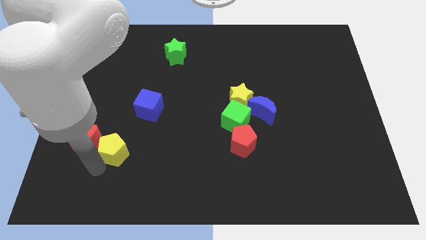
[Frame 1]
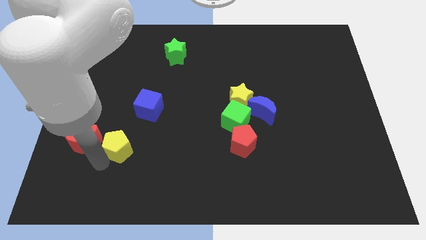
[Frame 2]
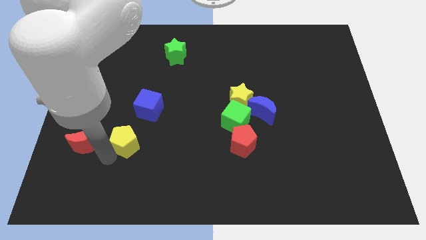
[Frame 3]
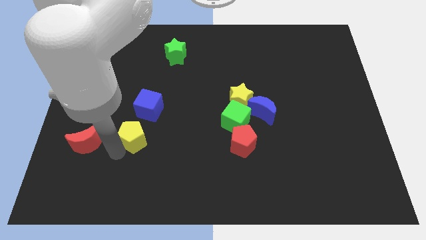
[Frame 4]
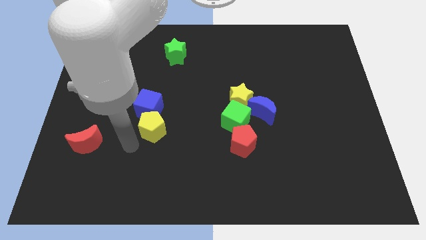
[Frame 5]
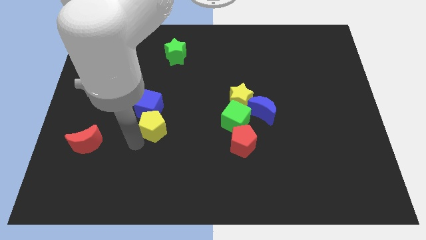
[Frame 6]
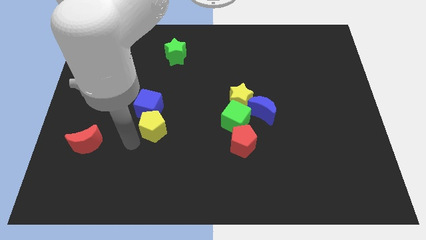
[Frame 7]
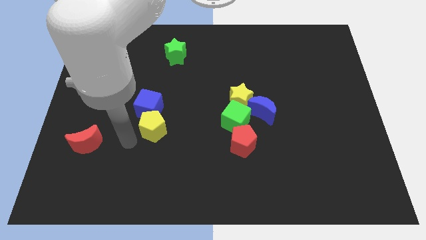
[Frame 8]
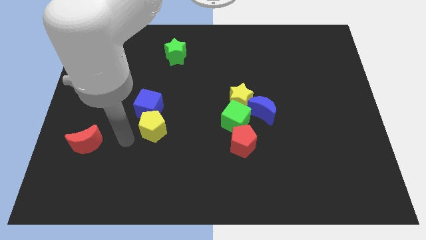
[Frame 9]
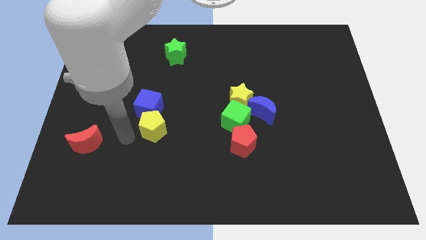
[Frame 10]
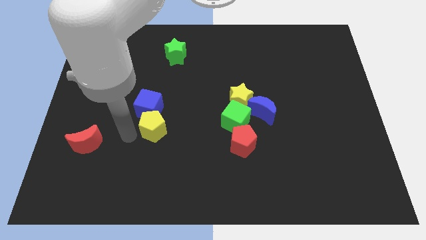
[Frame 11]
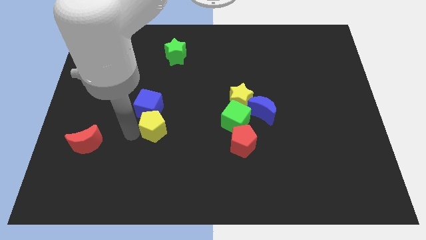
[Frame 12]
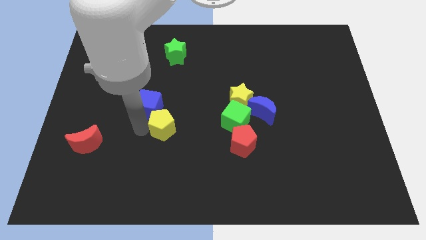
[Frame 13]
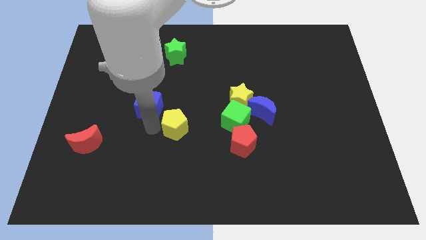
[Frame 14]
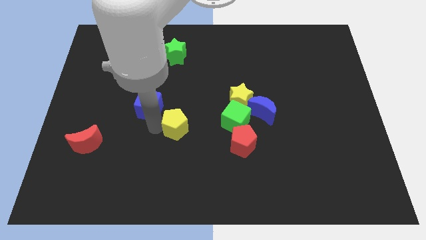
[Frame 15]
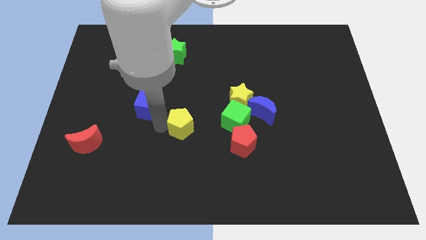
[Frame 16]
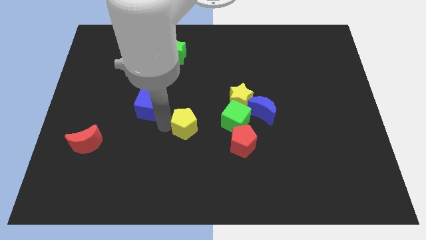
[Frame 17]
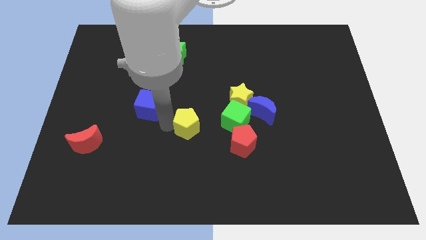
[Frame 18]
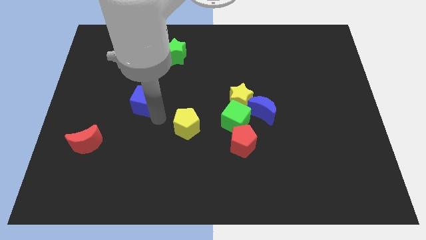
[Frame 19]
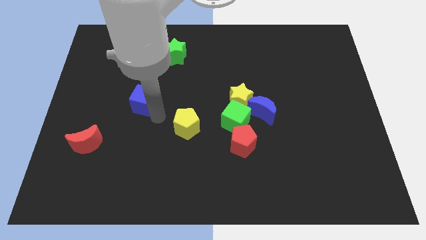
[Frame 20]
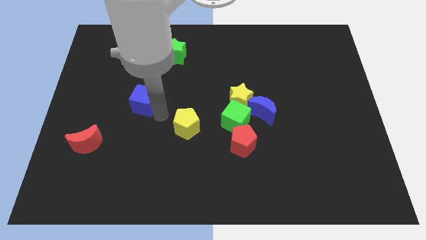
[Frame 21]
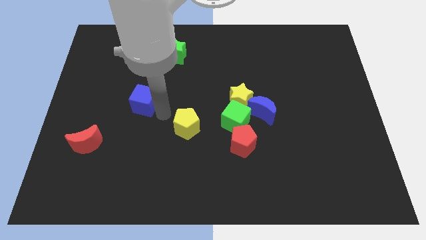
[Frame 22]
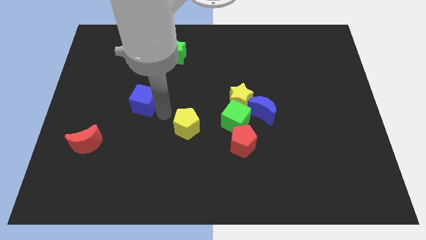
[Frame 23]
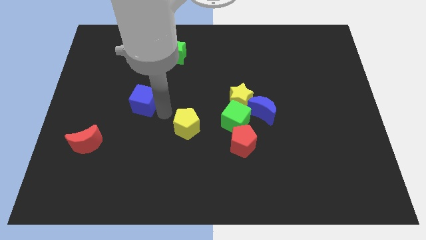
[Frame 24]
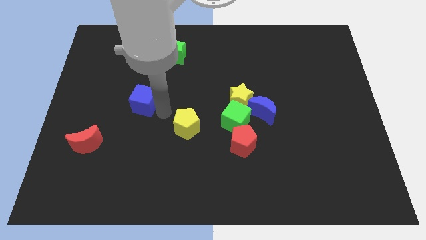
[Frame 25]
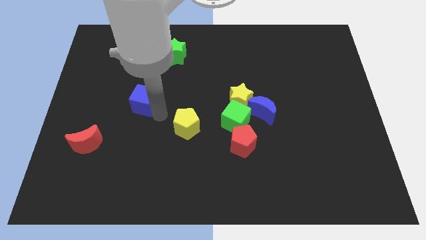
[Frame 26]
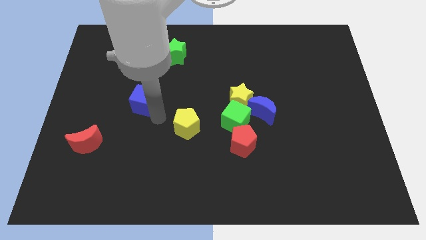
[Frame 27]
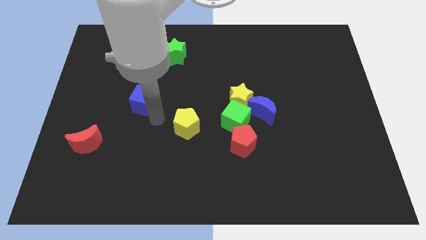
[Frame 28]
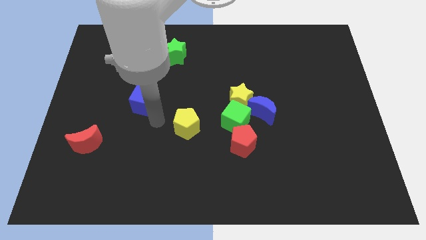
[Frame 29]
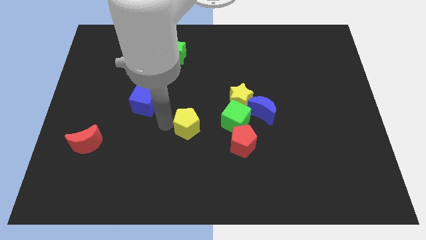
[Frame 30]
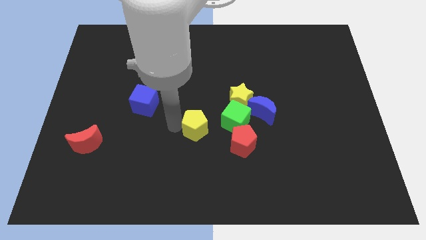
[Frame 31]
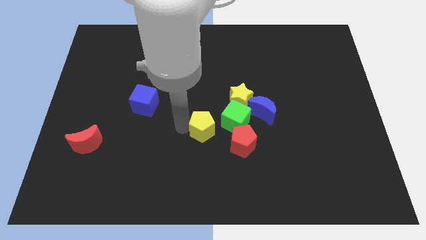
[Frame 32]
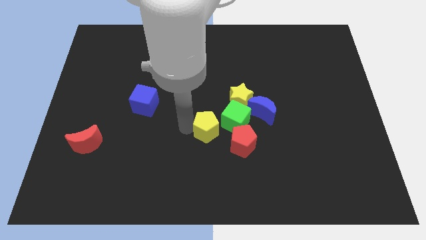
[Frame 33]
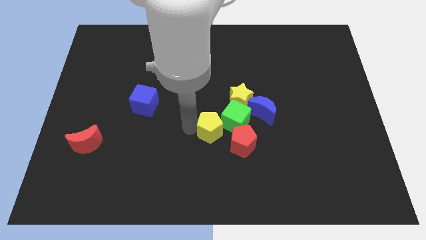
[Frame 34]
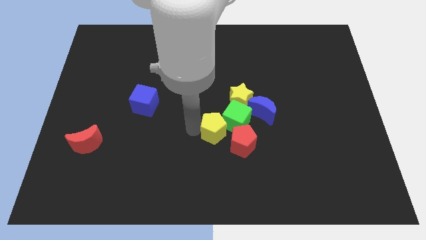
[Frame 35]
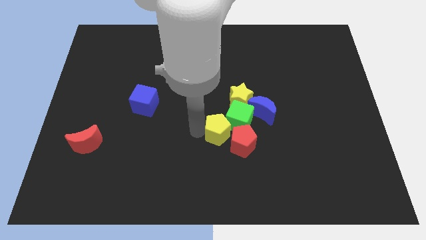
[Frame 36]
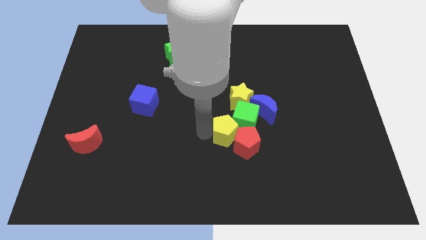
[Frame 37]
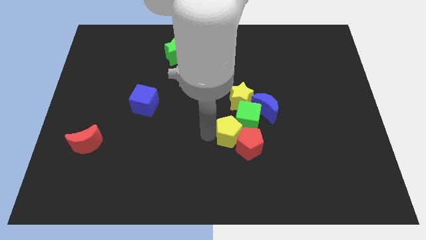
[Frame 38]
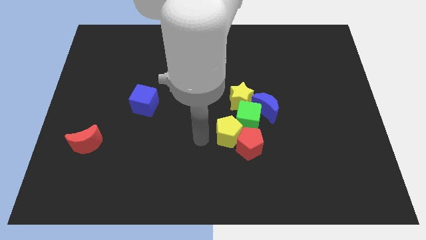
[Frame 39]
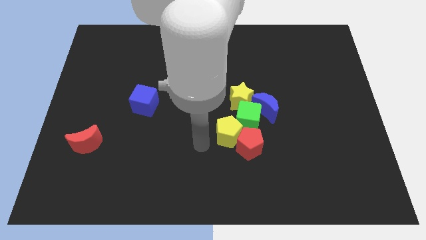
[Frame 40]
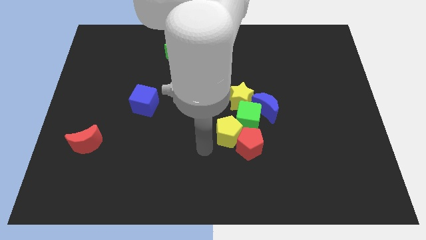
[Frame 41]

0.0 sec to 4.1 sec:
push the yellow pentagon into the group of blocks

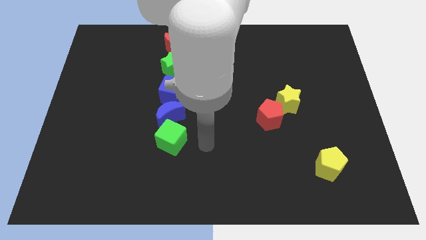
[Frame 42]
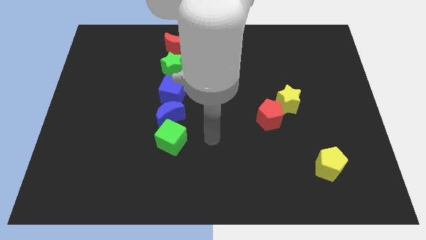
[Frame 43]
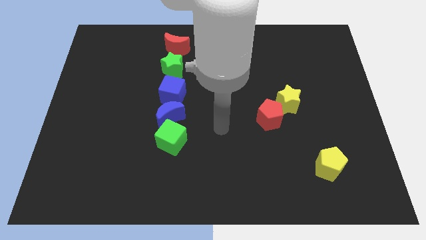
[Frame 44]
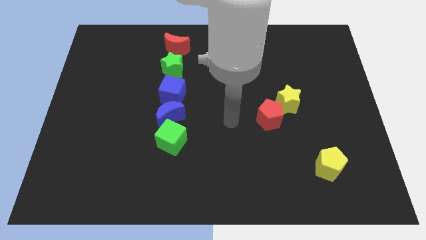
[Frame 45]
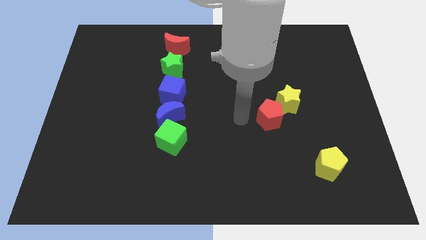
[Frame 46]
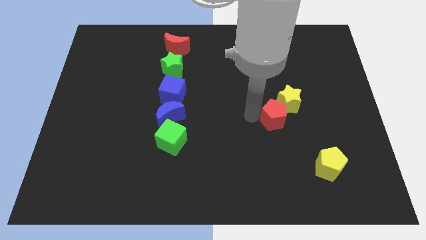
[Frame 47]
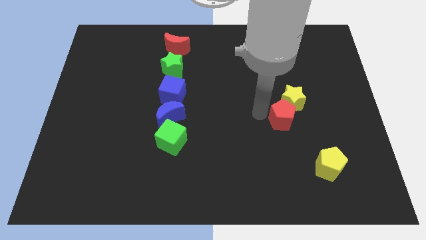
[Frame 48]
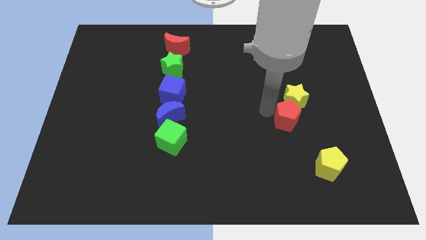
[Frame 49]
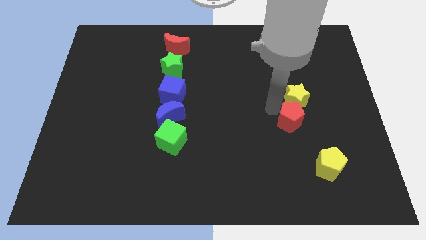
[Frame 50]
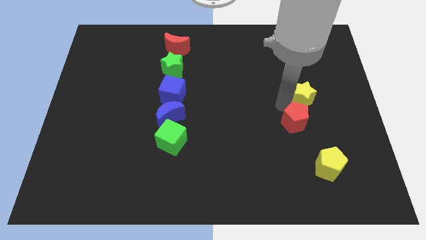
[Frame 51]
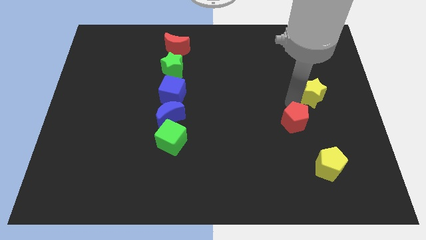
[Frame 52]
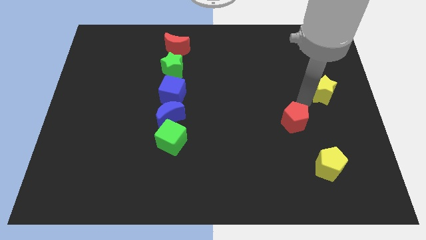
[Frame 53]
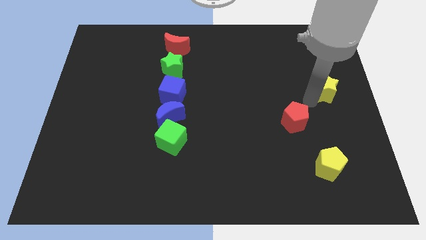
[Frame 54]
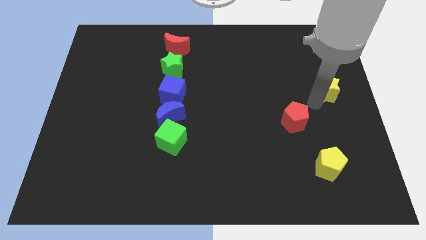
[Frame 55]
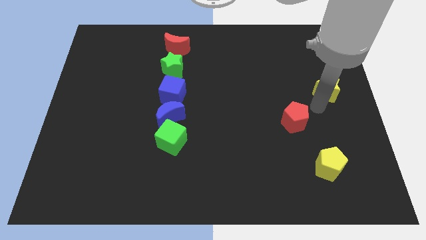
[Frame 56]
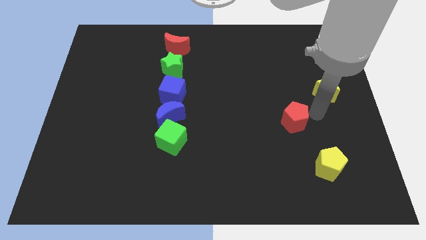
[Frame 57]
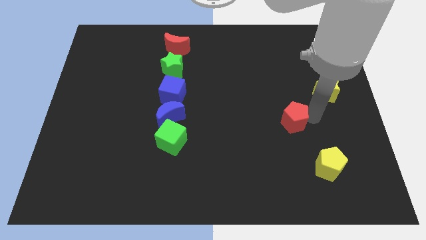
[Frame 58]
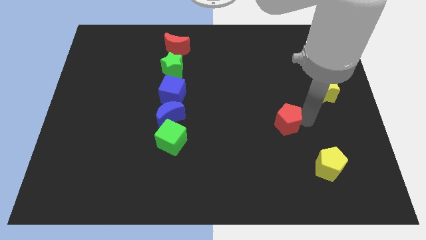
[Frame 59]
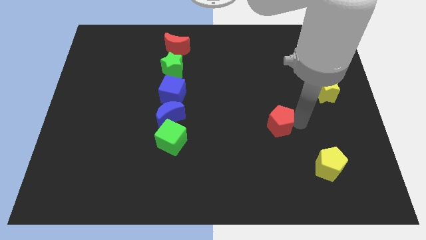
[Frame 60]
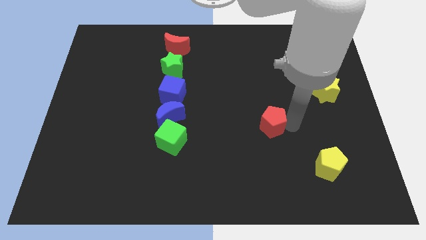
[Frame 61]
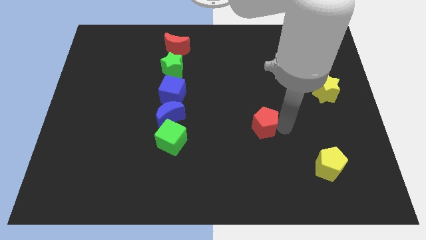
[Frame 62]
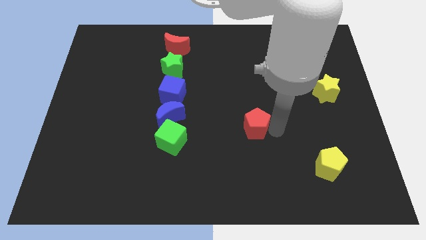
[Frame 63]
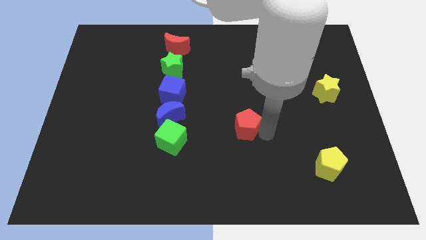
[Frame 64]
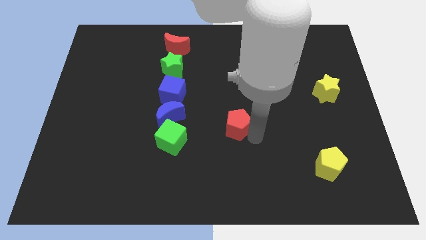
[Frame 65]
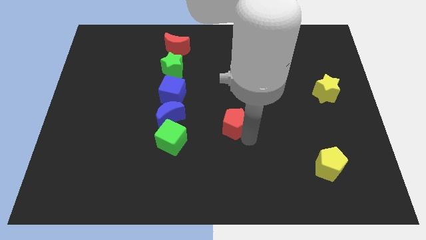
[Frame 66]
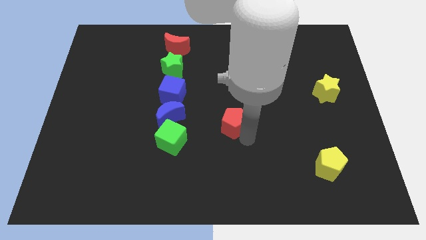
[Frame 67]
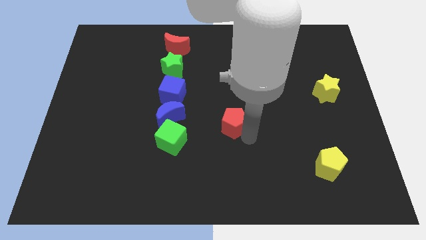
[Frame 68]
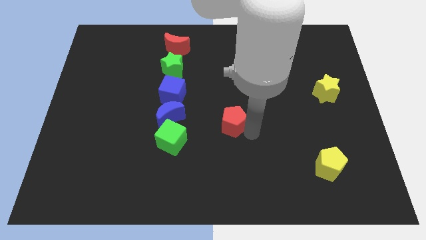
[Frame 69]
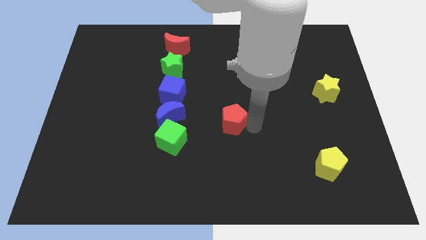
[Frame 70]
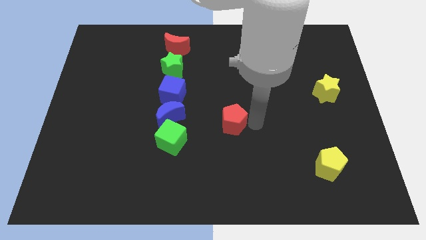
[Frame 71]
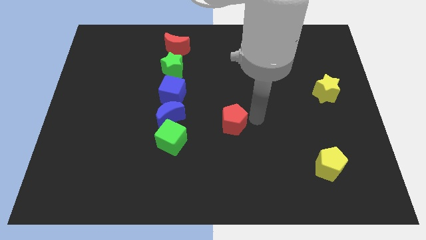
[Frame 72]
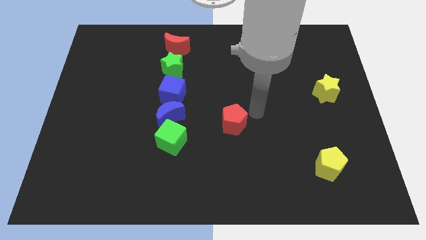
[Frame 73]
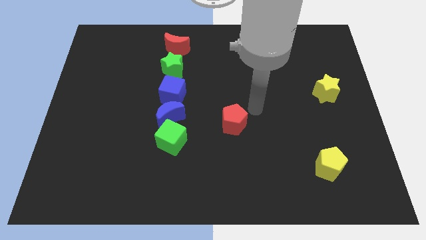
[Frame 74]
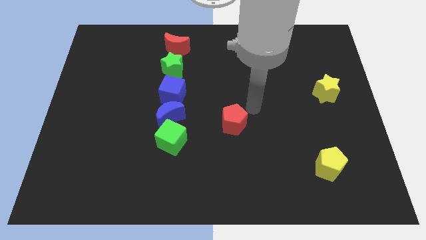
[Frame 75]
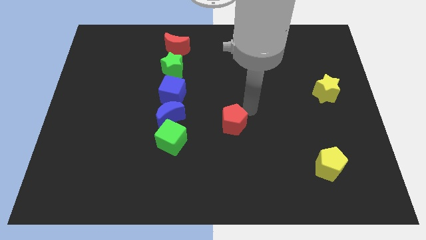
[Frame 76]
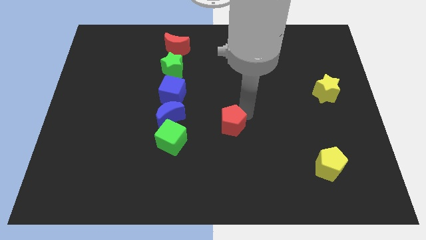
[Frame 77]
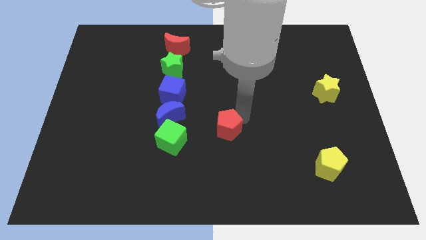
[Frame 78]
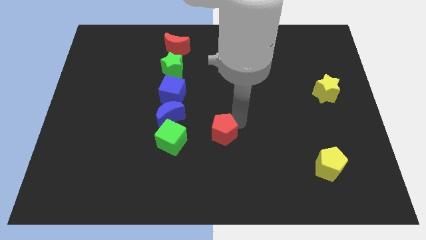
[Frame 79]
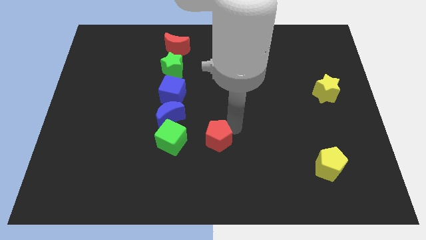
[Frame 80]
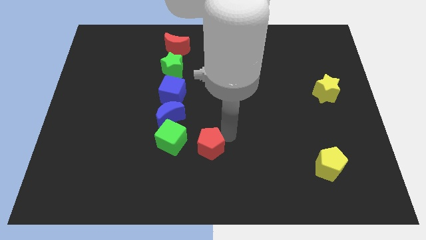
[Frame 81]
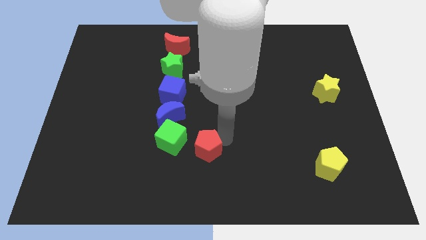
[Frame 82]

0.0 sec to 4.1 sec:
separate the red pentagon from the yellow star

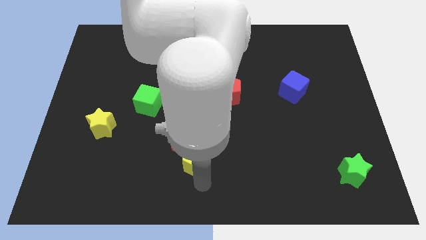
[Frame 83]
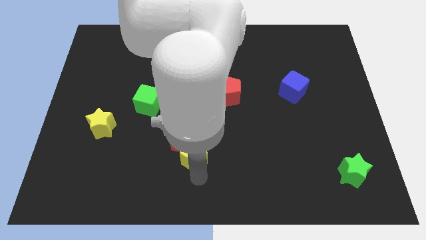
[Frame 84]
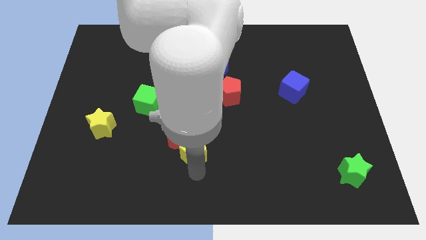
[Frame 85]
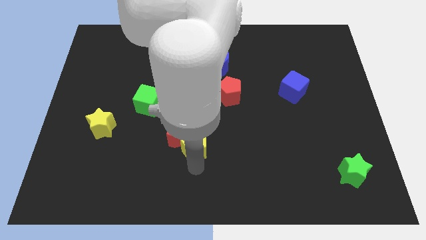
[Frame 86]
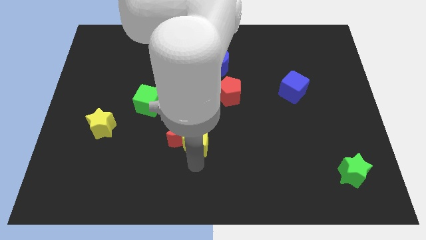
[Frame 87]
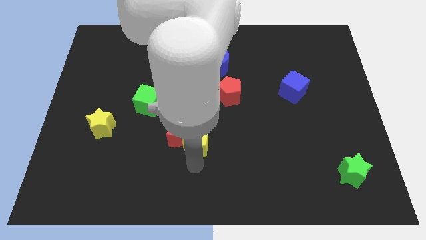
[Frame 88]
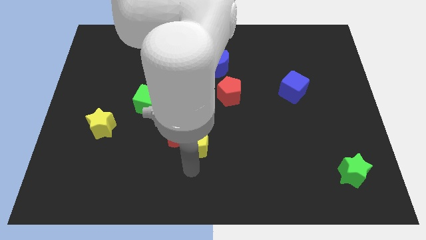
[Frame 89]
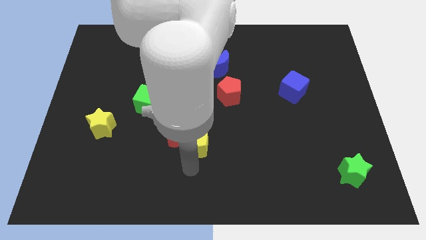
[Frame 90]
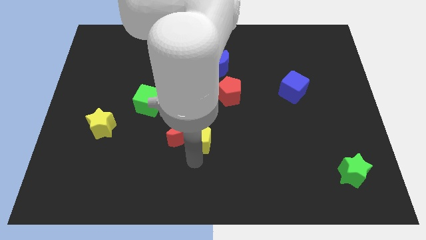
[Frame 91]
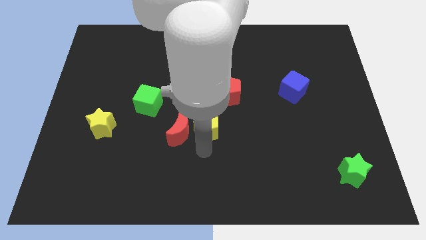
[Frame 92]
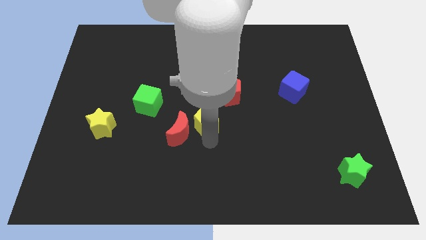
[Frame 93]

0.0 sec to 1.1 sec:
push the yellow star right to the red moon
